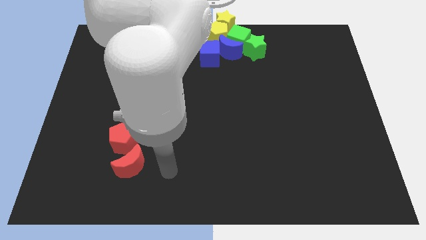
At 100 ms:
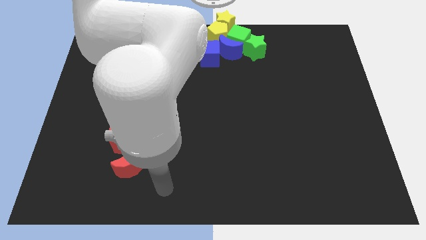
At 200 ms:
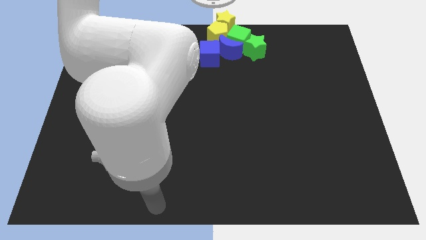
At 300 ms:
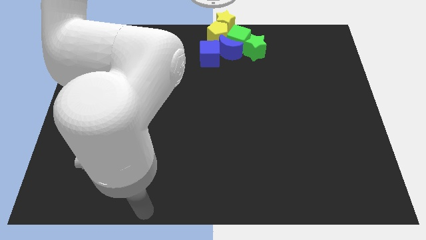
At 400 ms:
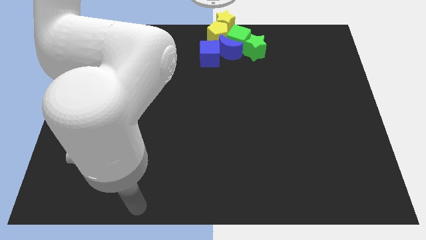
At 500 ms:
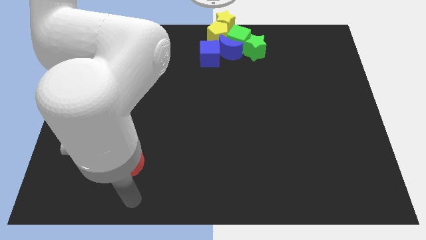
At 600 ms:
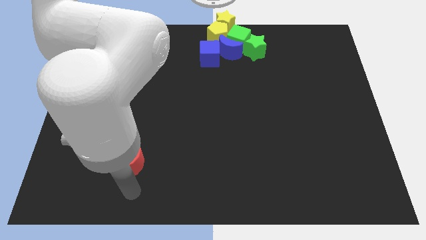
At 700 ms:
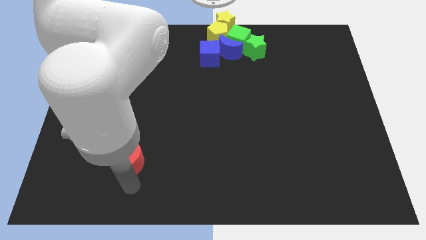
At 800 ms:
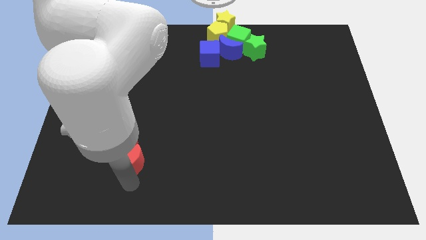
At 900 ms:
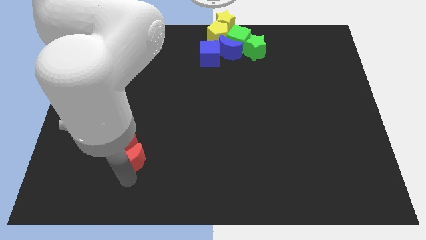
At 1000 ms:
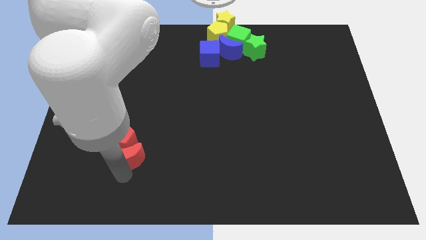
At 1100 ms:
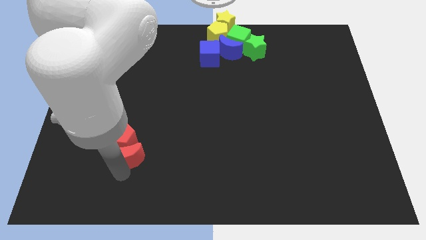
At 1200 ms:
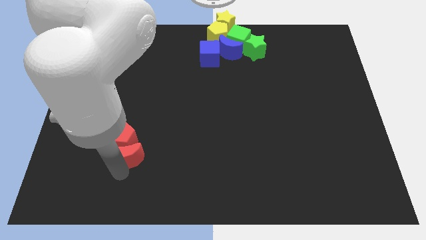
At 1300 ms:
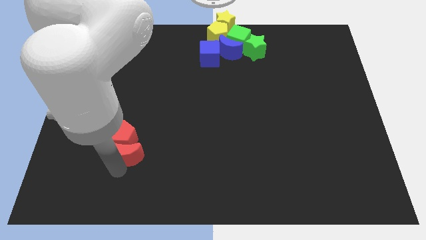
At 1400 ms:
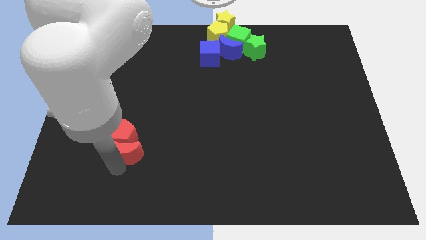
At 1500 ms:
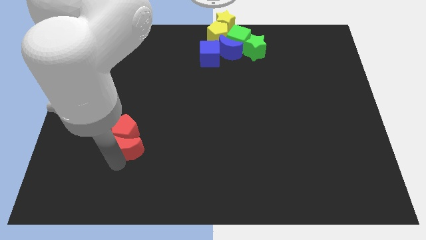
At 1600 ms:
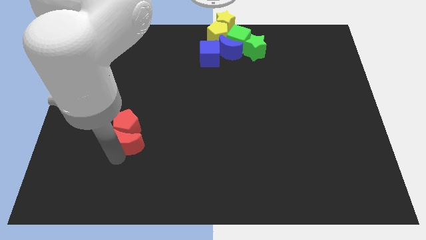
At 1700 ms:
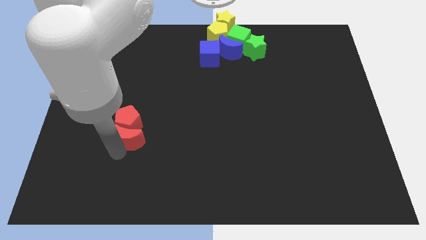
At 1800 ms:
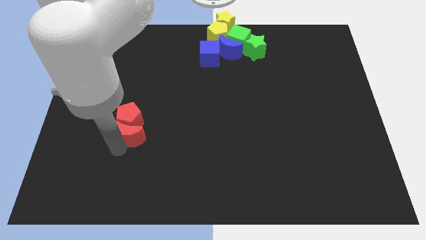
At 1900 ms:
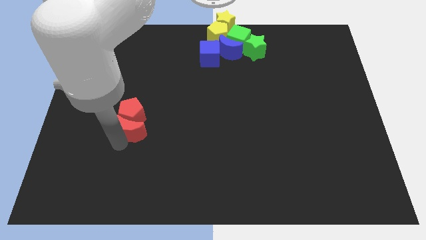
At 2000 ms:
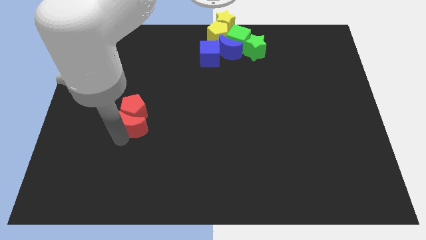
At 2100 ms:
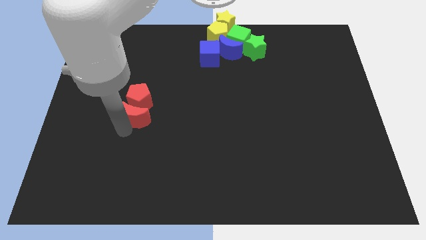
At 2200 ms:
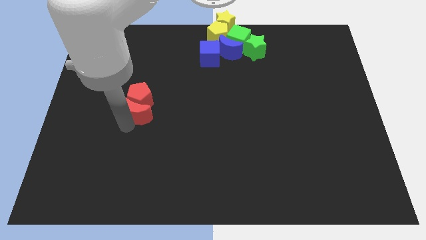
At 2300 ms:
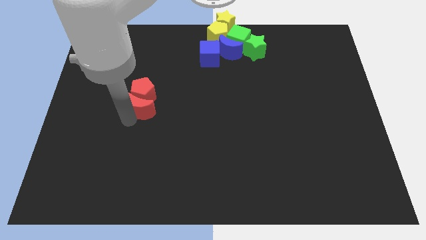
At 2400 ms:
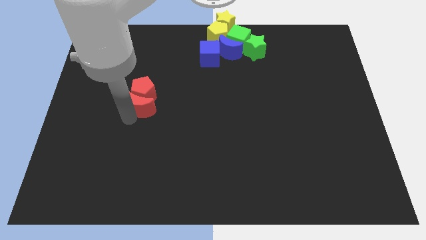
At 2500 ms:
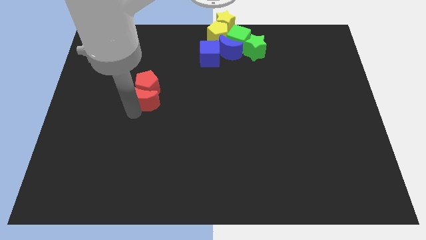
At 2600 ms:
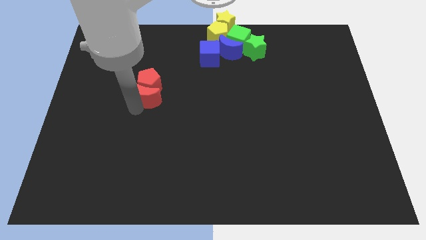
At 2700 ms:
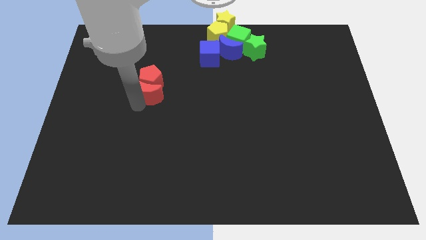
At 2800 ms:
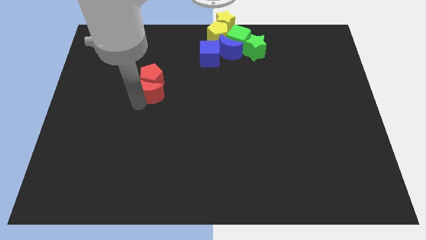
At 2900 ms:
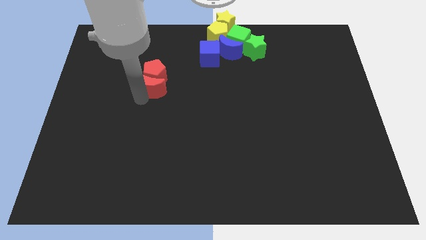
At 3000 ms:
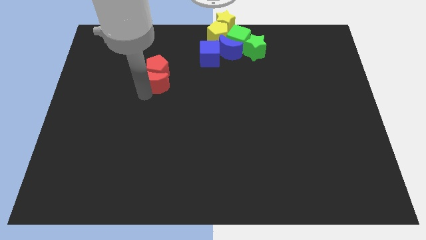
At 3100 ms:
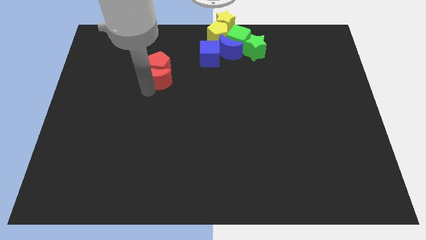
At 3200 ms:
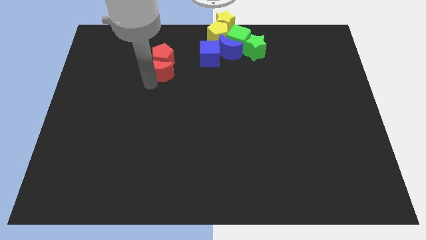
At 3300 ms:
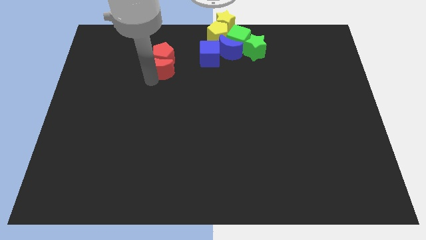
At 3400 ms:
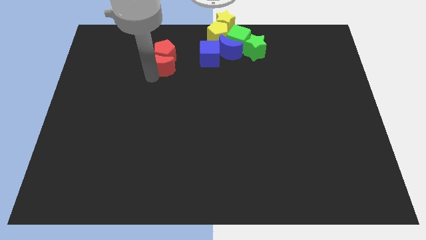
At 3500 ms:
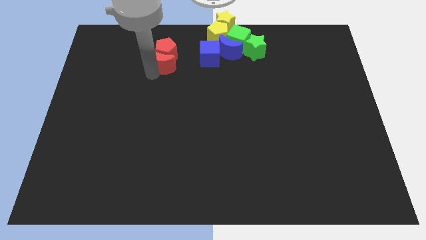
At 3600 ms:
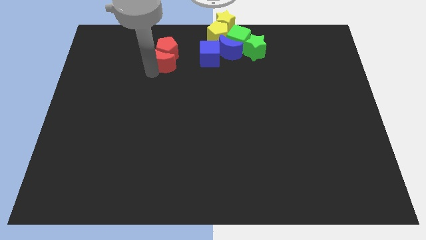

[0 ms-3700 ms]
put the red blocks left to the group of blcoks

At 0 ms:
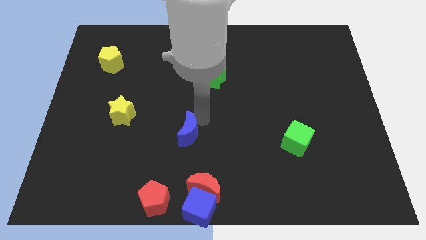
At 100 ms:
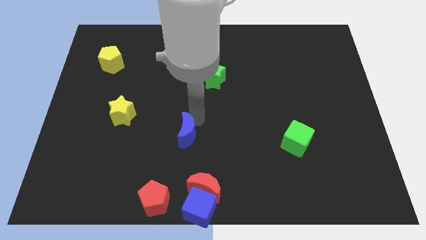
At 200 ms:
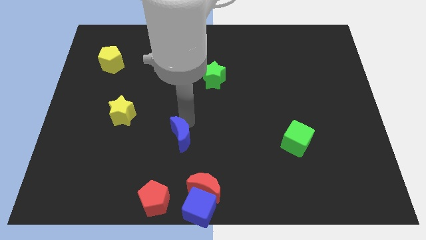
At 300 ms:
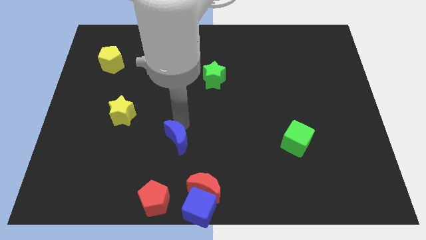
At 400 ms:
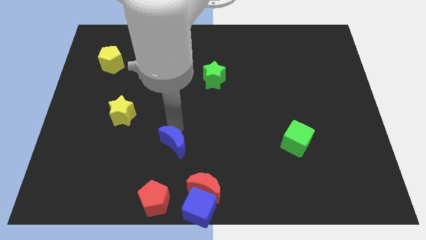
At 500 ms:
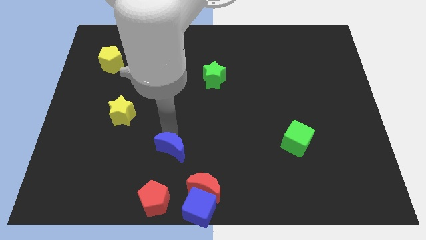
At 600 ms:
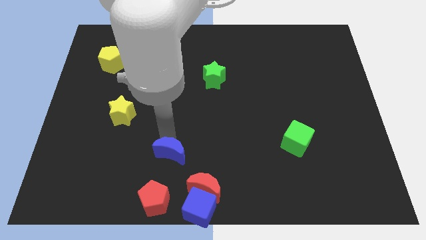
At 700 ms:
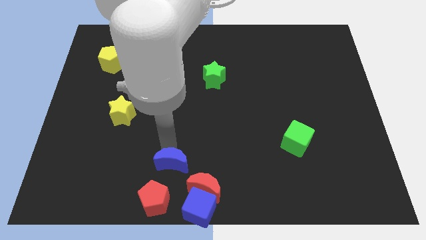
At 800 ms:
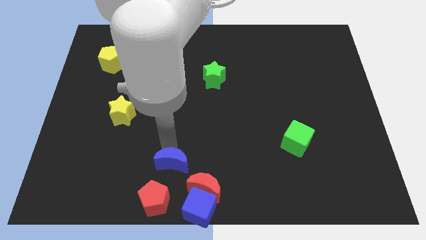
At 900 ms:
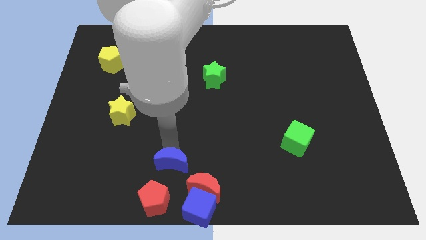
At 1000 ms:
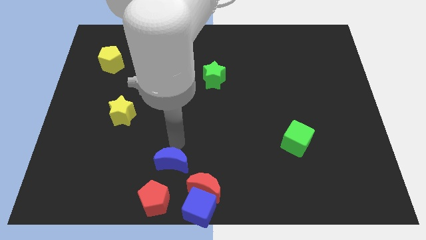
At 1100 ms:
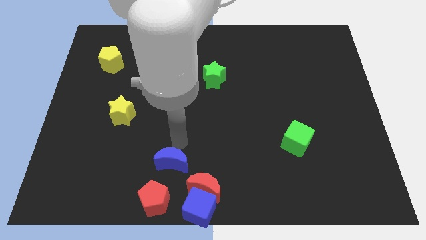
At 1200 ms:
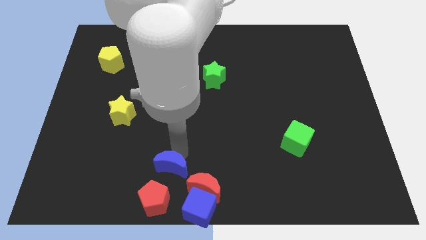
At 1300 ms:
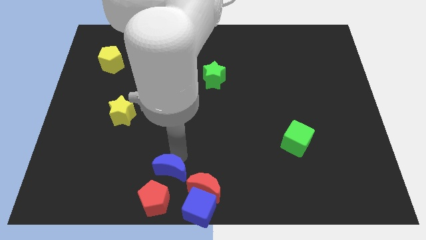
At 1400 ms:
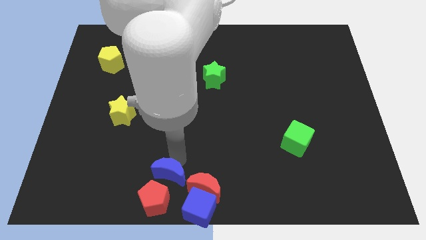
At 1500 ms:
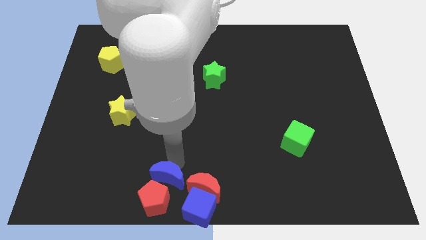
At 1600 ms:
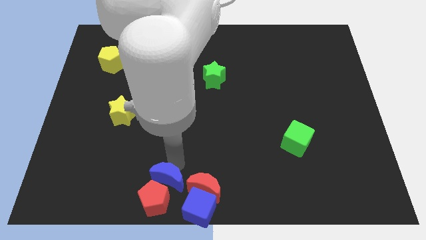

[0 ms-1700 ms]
move the blue crescent above the red pentagon

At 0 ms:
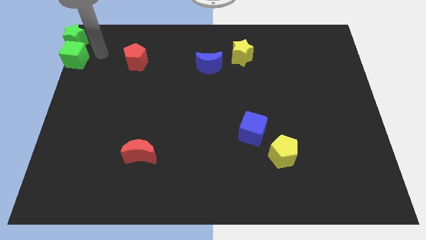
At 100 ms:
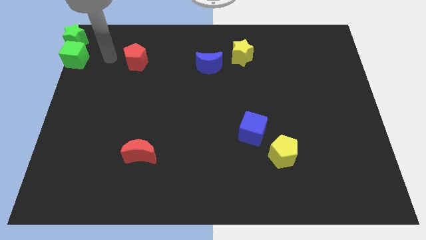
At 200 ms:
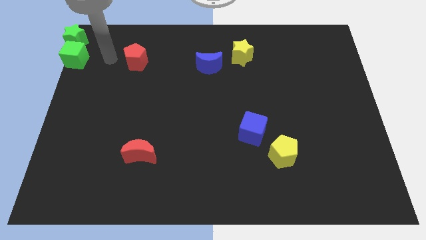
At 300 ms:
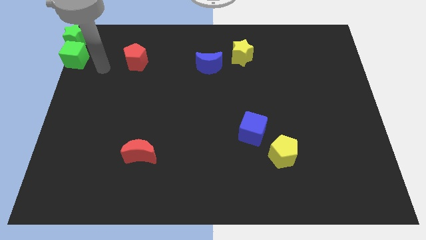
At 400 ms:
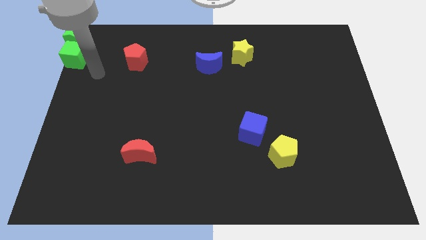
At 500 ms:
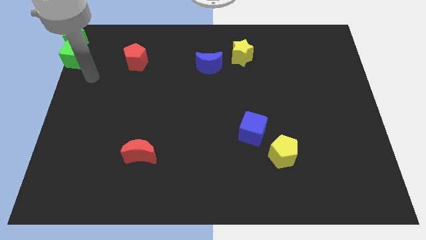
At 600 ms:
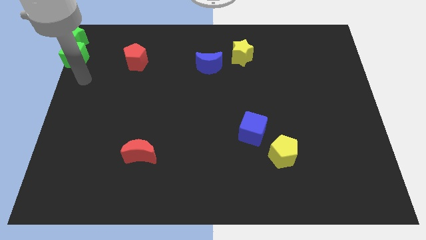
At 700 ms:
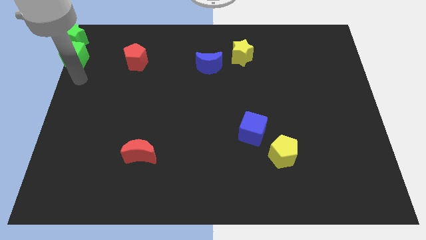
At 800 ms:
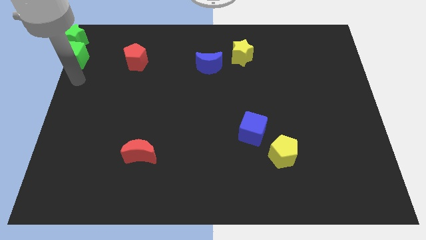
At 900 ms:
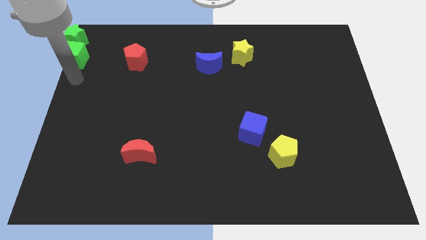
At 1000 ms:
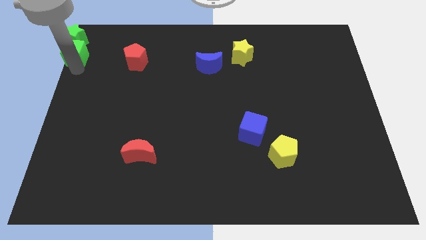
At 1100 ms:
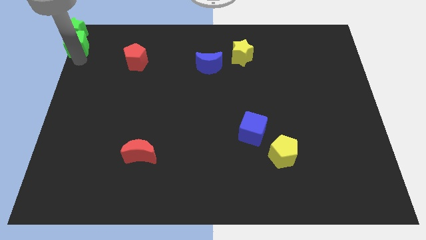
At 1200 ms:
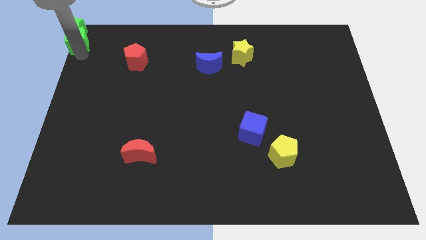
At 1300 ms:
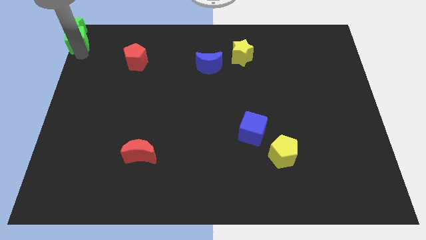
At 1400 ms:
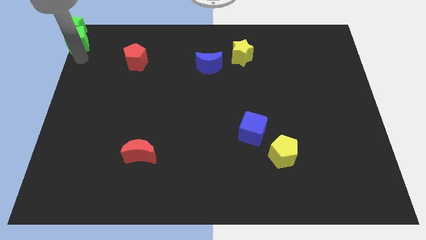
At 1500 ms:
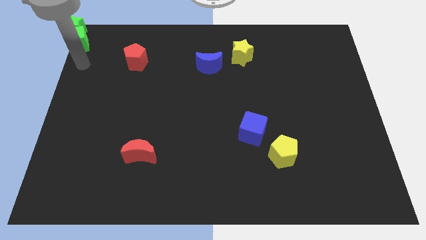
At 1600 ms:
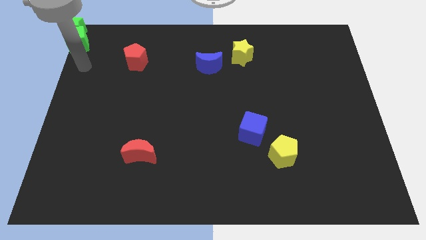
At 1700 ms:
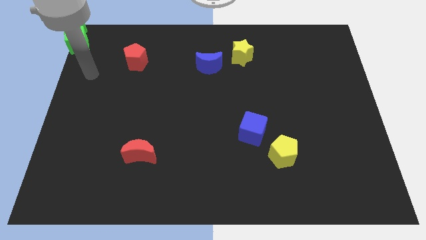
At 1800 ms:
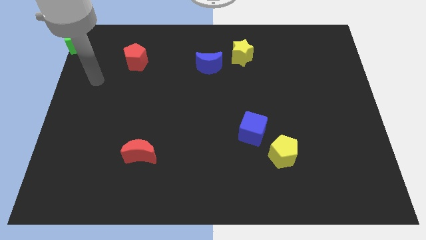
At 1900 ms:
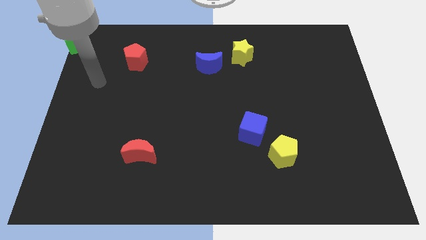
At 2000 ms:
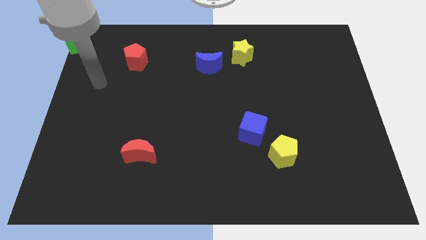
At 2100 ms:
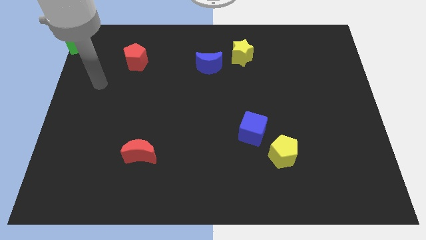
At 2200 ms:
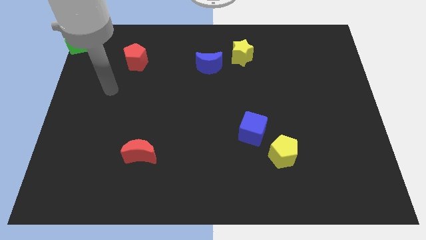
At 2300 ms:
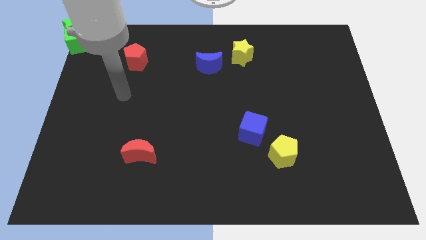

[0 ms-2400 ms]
place the green star and the green cube at the top left corner

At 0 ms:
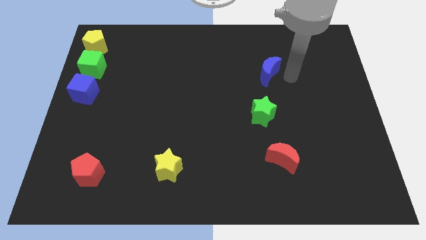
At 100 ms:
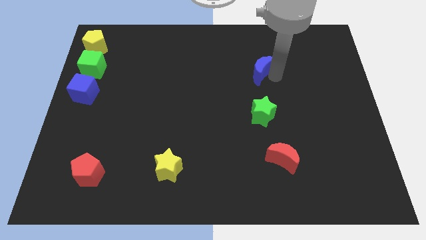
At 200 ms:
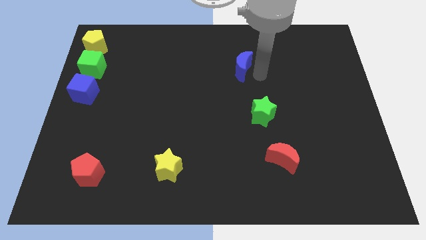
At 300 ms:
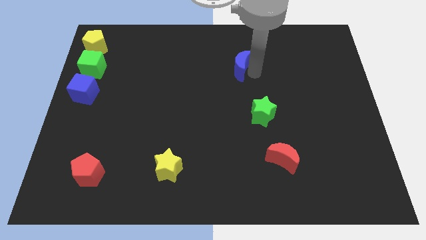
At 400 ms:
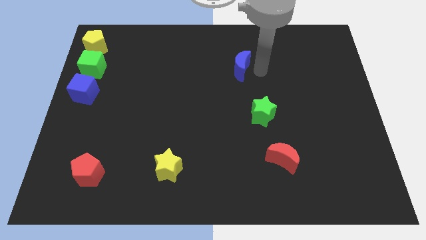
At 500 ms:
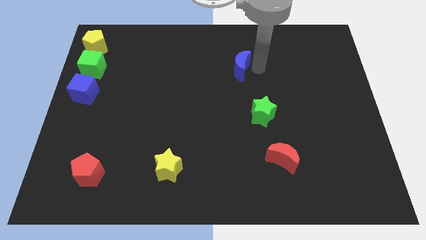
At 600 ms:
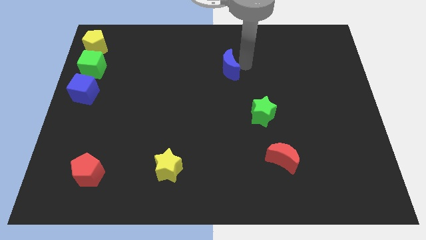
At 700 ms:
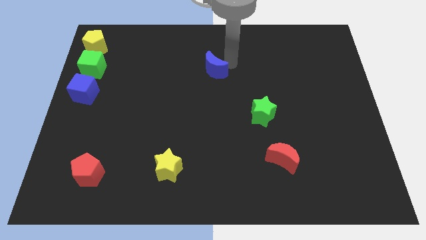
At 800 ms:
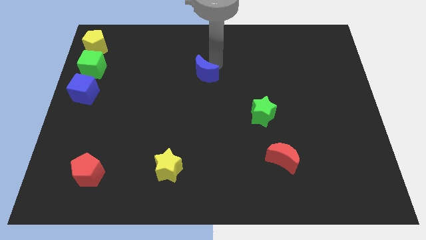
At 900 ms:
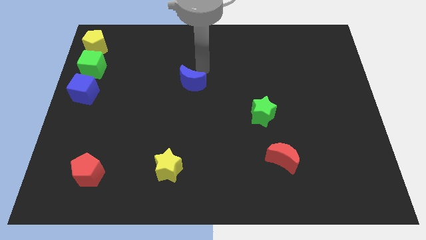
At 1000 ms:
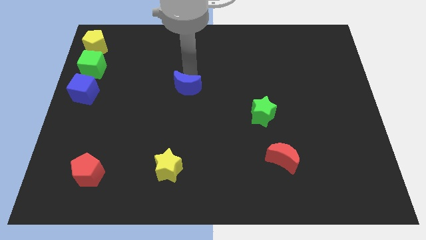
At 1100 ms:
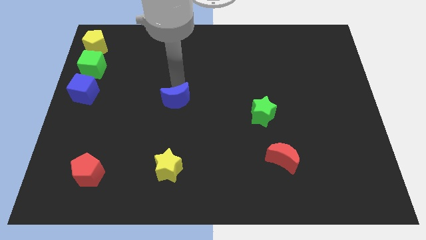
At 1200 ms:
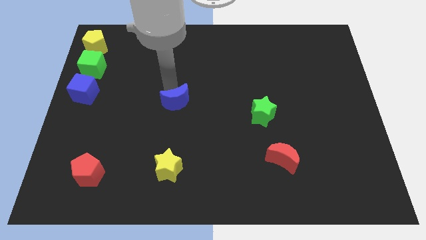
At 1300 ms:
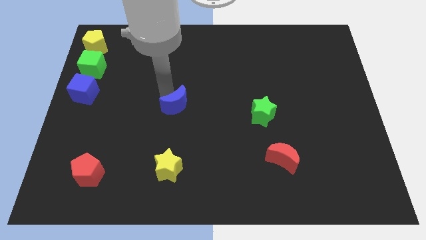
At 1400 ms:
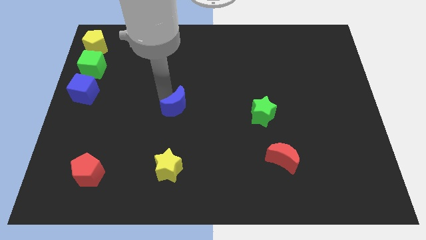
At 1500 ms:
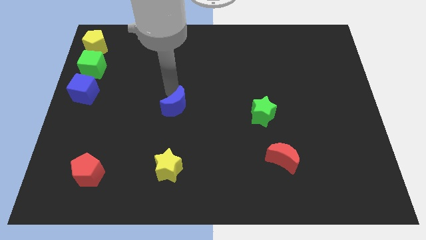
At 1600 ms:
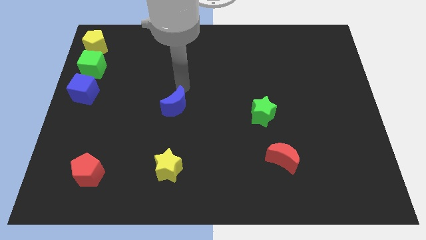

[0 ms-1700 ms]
place the blue moon parallel left to the green star
